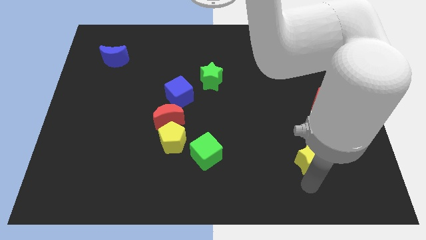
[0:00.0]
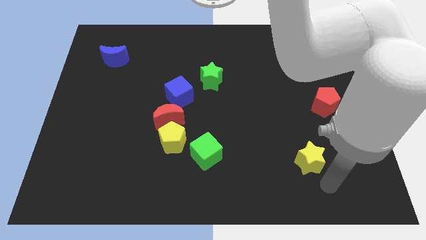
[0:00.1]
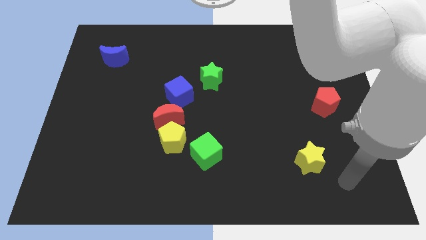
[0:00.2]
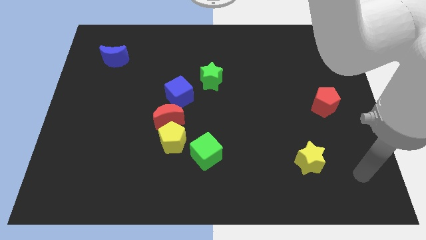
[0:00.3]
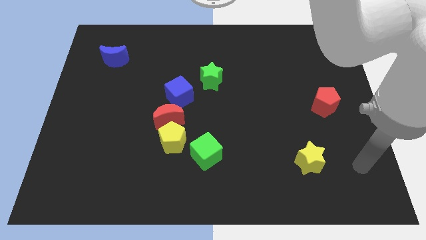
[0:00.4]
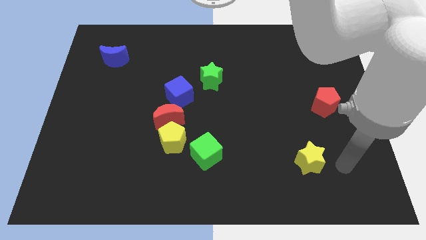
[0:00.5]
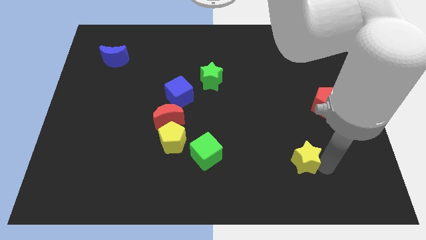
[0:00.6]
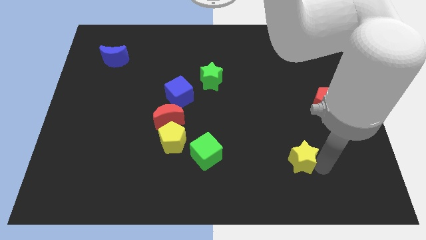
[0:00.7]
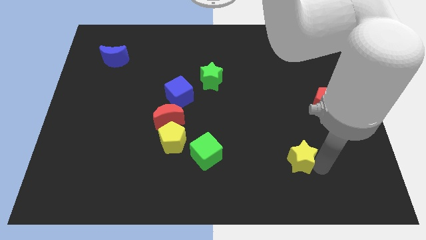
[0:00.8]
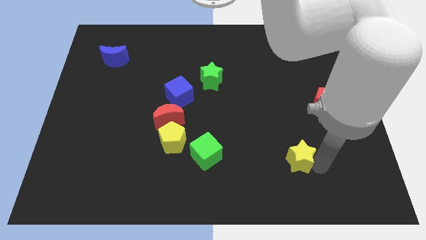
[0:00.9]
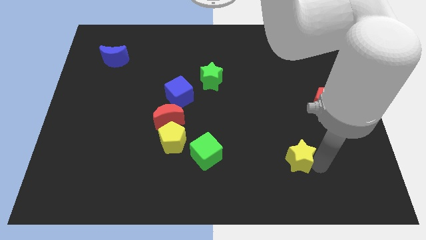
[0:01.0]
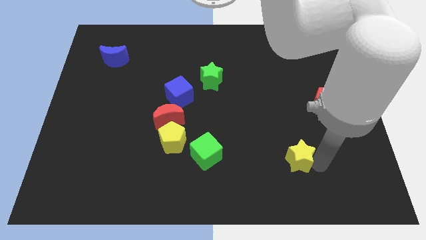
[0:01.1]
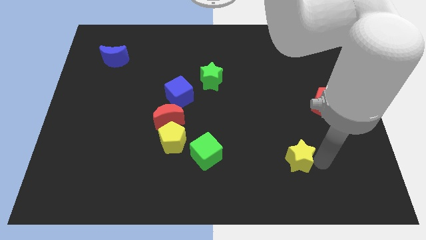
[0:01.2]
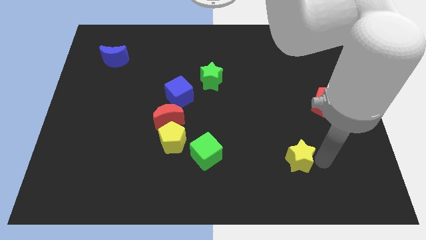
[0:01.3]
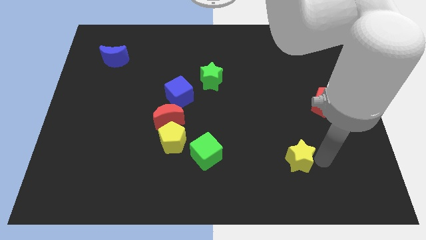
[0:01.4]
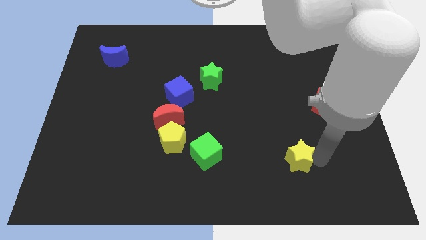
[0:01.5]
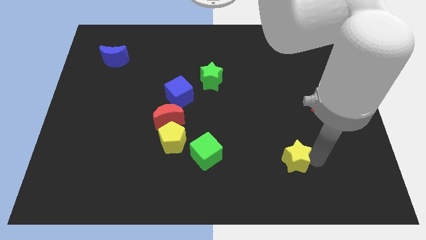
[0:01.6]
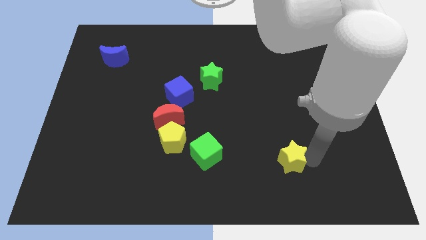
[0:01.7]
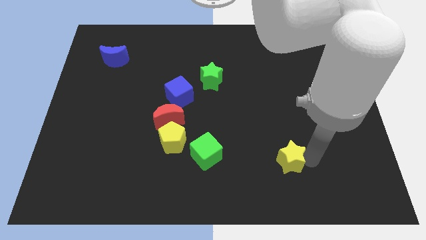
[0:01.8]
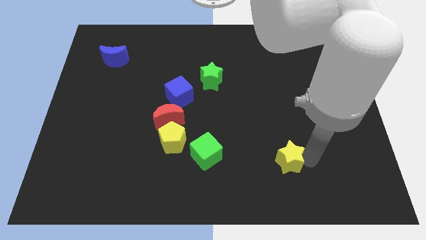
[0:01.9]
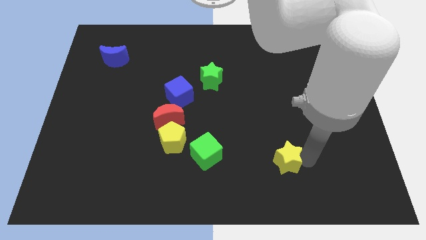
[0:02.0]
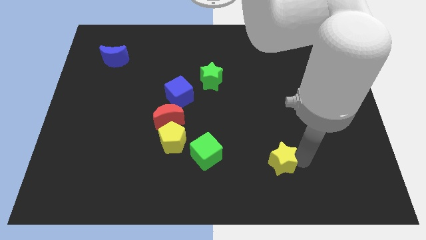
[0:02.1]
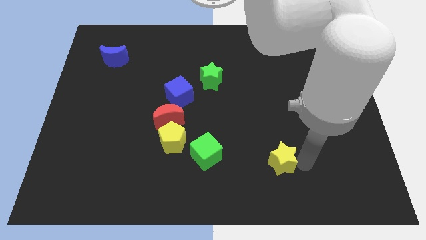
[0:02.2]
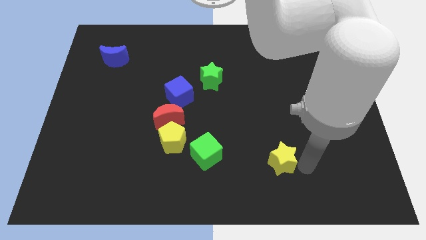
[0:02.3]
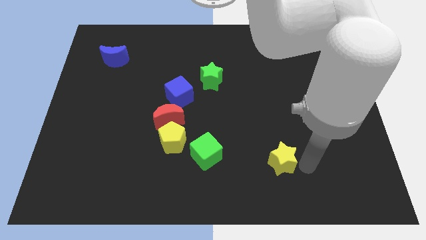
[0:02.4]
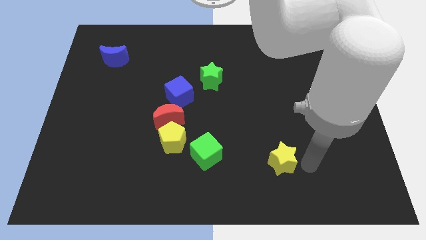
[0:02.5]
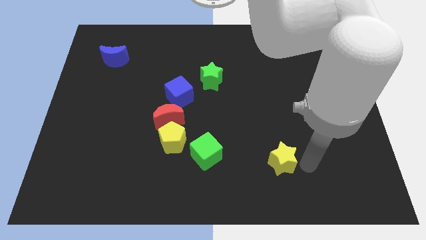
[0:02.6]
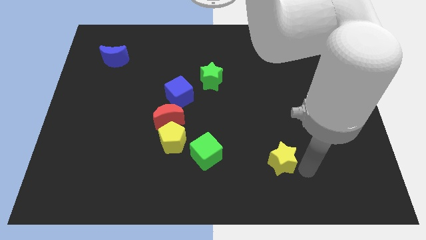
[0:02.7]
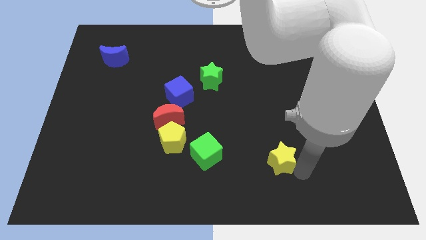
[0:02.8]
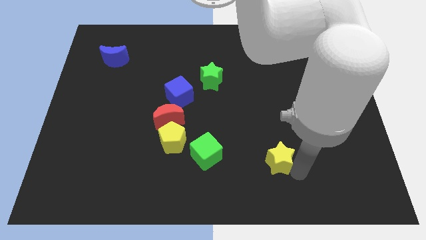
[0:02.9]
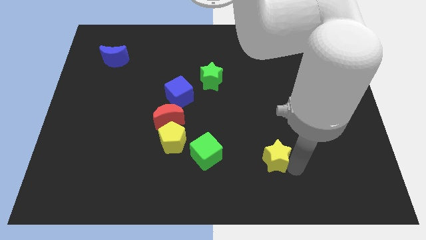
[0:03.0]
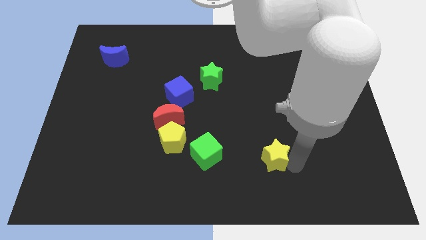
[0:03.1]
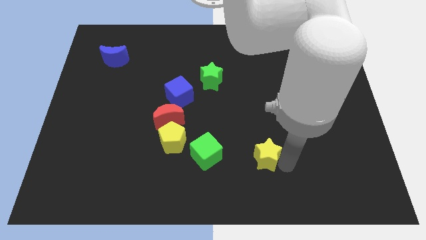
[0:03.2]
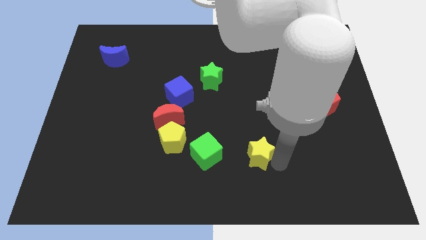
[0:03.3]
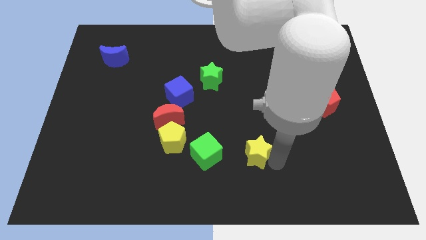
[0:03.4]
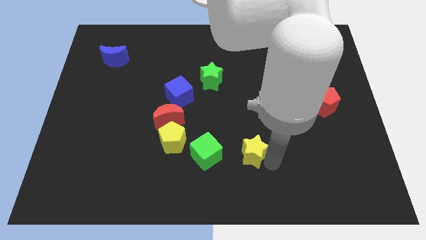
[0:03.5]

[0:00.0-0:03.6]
push the yellow star towards the right side of the green cube

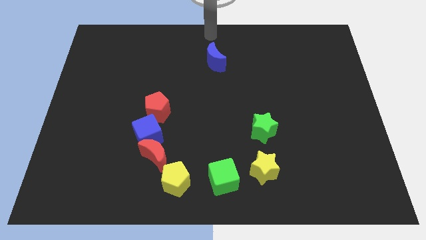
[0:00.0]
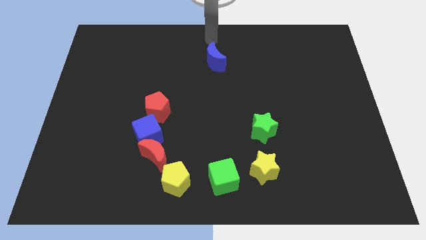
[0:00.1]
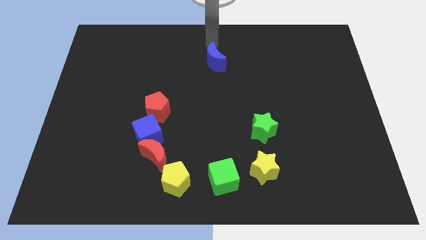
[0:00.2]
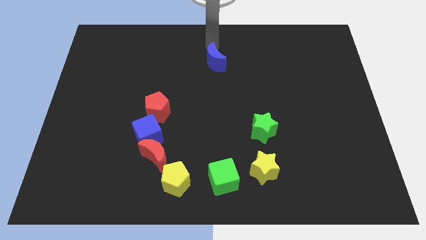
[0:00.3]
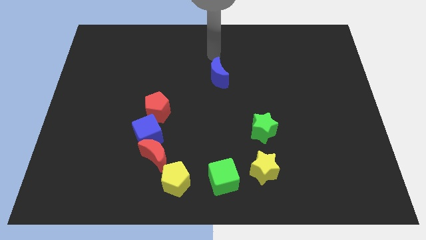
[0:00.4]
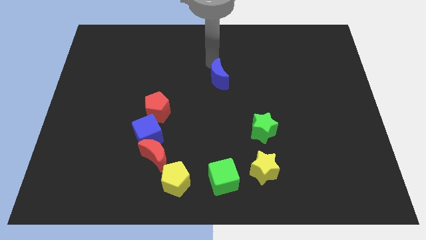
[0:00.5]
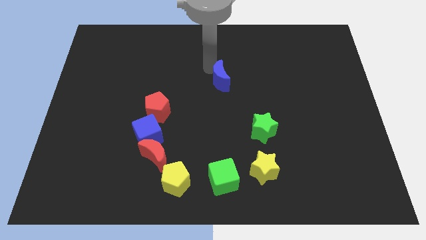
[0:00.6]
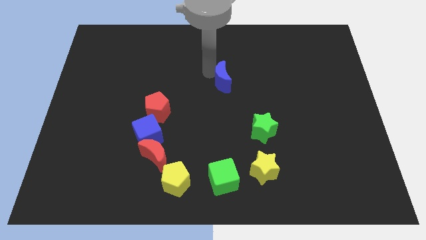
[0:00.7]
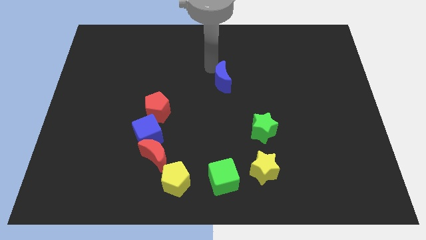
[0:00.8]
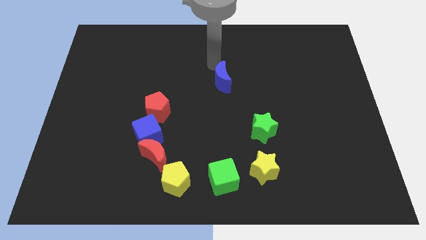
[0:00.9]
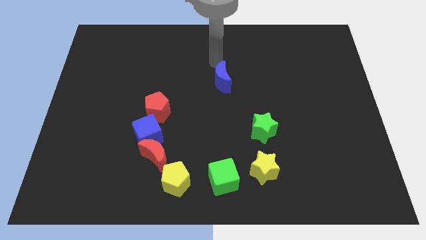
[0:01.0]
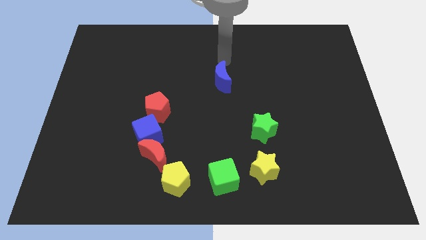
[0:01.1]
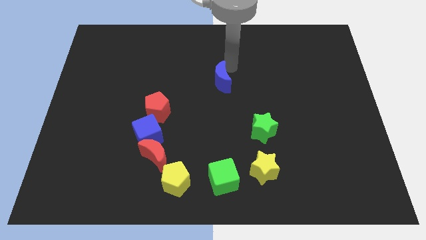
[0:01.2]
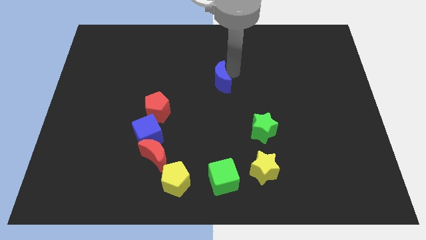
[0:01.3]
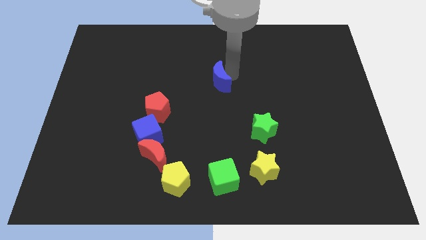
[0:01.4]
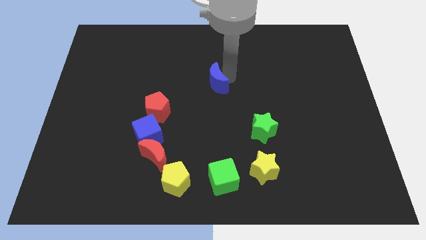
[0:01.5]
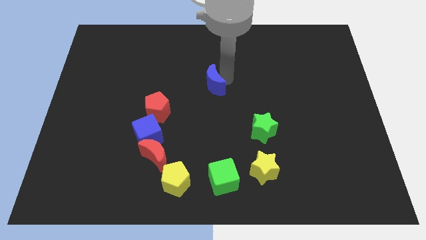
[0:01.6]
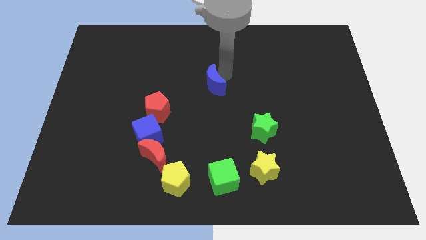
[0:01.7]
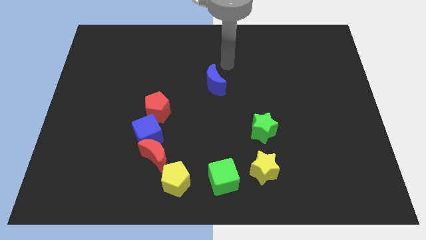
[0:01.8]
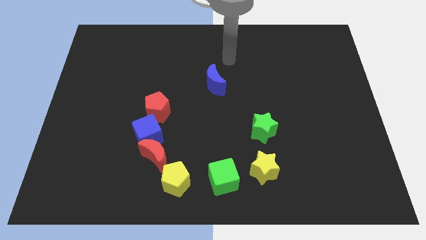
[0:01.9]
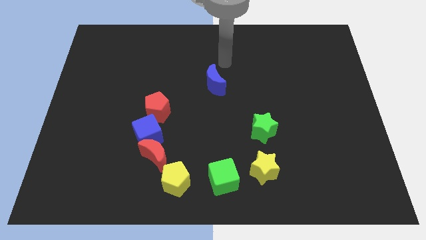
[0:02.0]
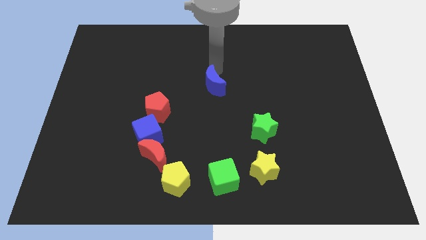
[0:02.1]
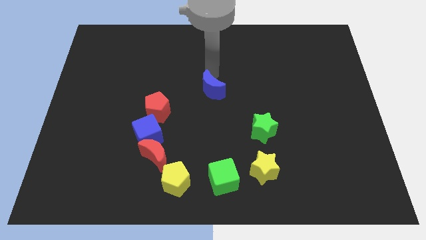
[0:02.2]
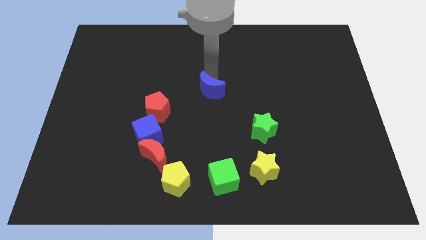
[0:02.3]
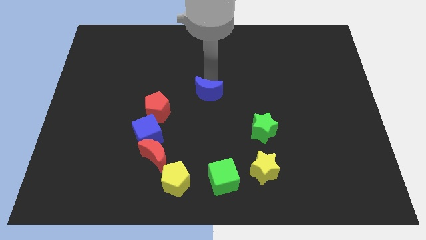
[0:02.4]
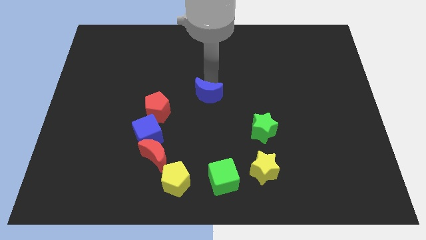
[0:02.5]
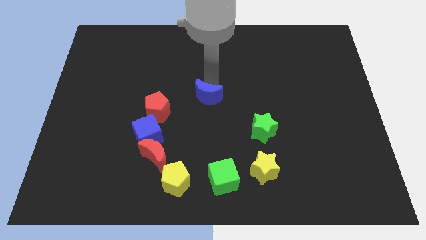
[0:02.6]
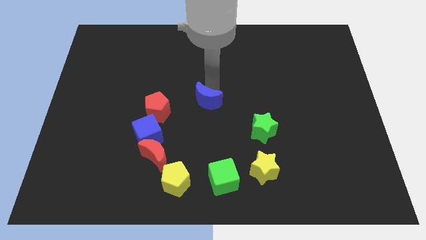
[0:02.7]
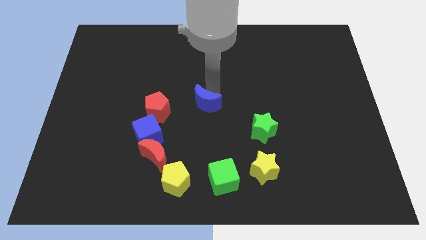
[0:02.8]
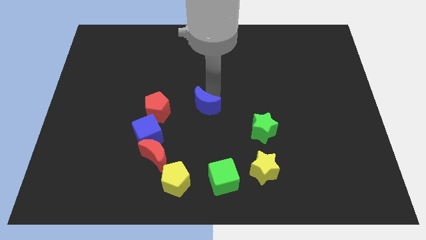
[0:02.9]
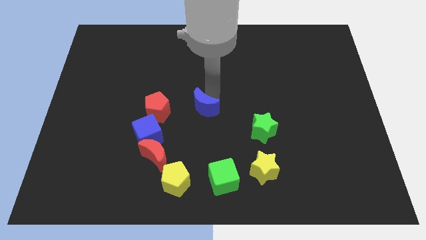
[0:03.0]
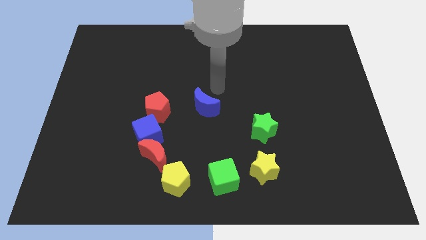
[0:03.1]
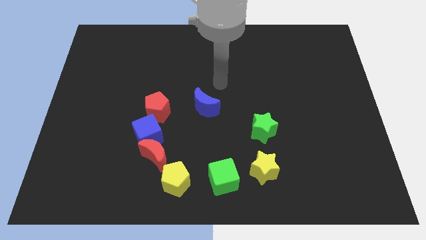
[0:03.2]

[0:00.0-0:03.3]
move the blue moon to the right of the blue moon

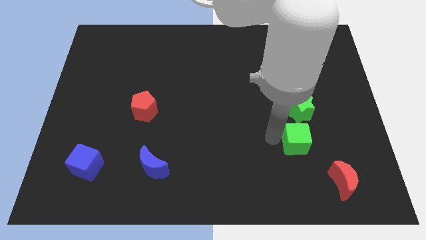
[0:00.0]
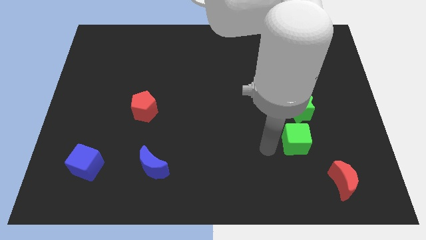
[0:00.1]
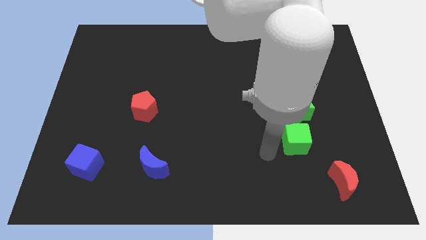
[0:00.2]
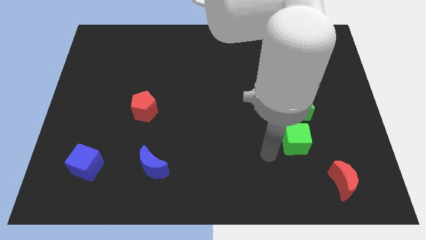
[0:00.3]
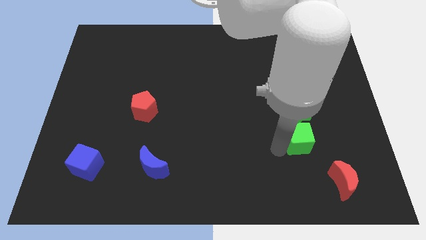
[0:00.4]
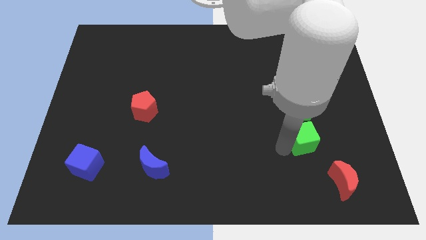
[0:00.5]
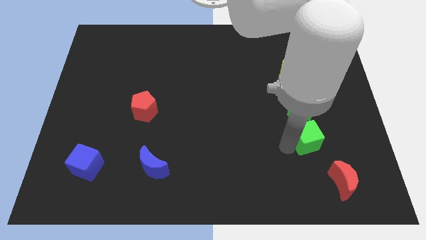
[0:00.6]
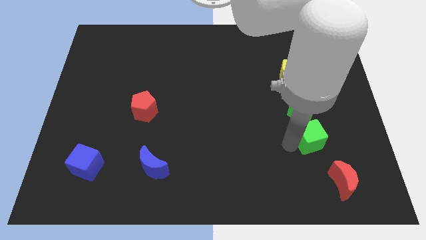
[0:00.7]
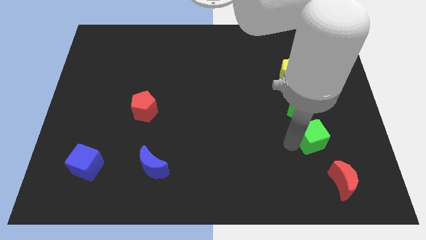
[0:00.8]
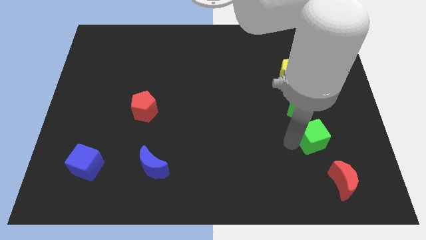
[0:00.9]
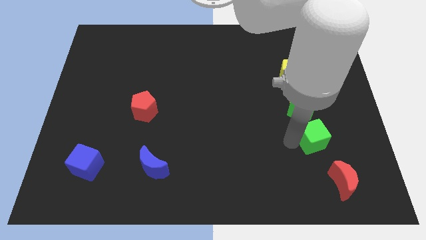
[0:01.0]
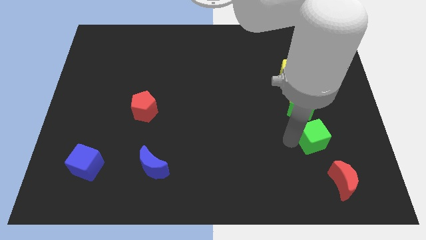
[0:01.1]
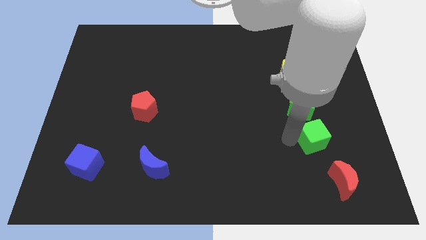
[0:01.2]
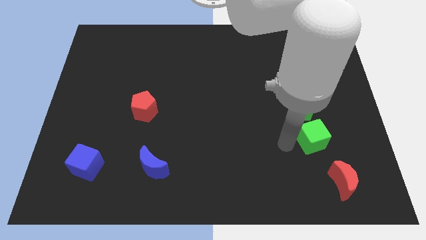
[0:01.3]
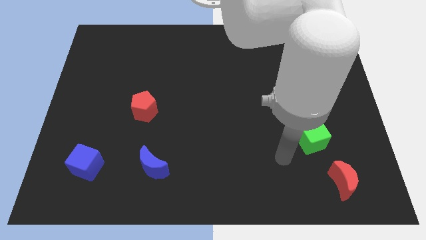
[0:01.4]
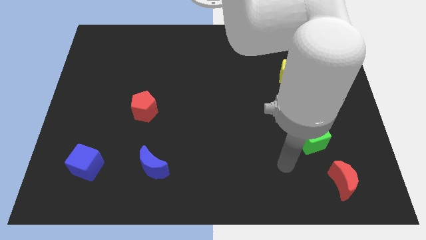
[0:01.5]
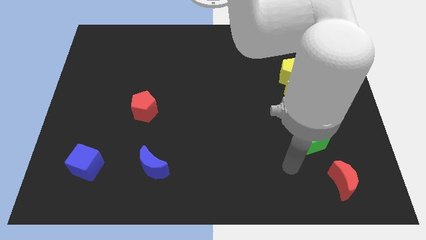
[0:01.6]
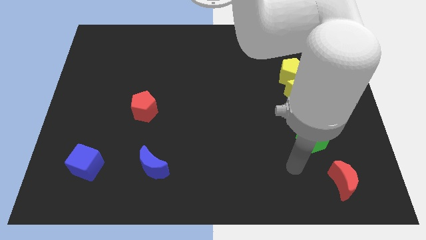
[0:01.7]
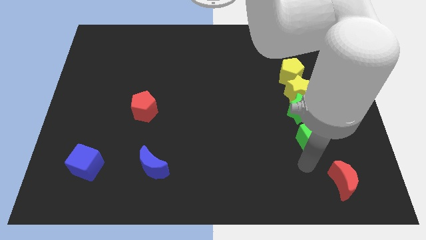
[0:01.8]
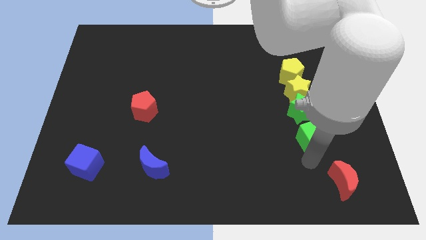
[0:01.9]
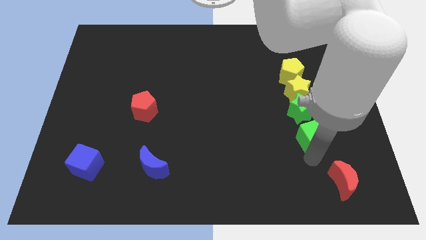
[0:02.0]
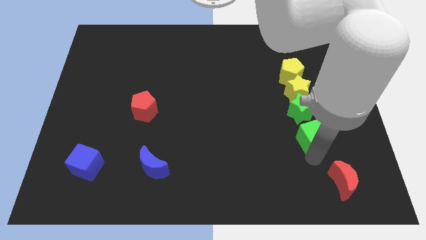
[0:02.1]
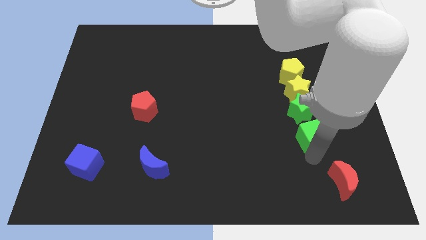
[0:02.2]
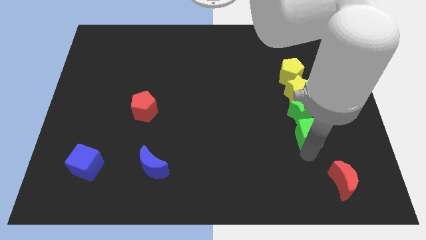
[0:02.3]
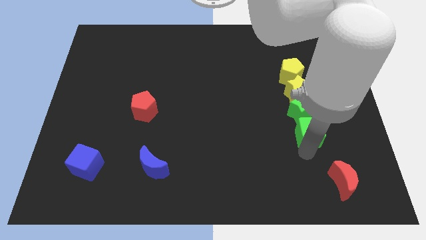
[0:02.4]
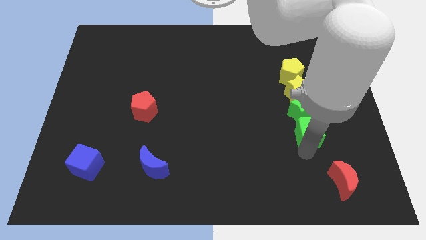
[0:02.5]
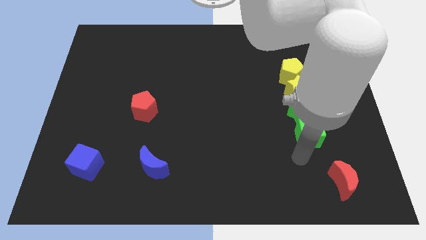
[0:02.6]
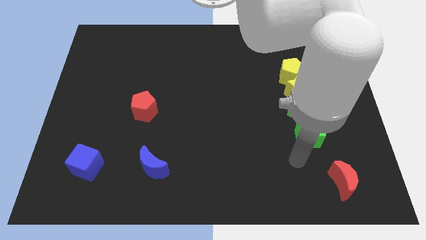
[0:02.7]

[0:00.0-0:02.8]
drag the green cube slightly to the bottom of the green star
